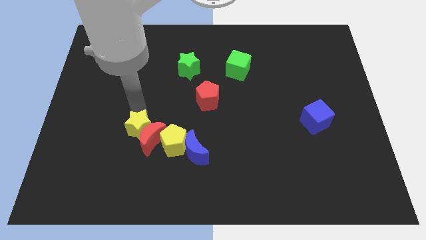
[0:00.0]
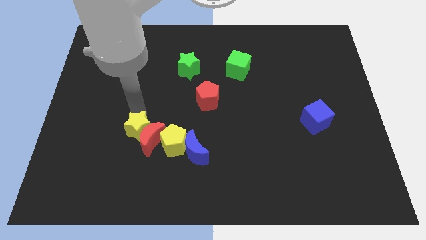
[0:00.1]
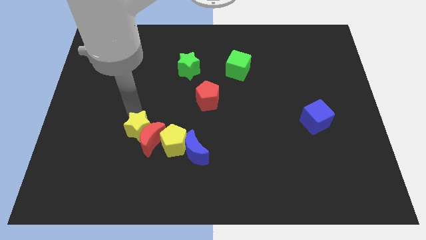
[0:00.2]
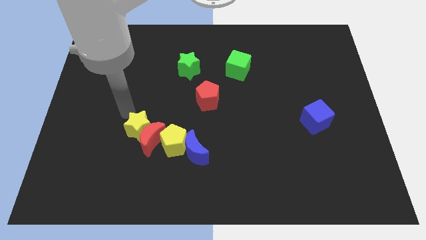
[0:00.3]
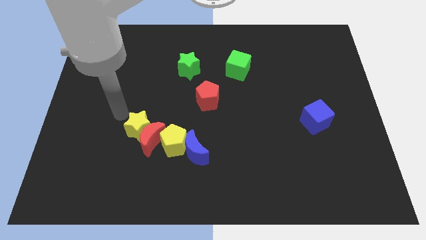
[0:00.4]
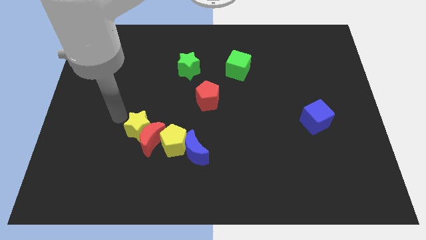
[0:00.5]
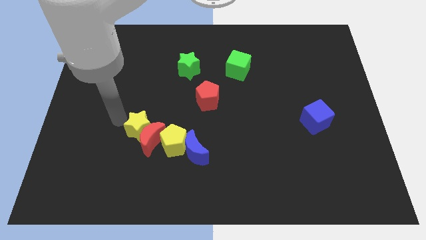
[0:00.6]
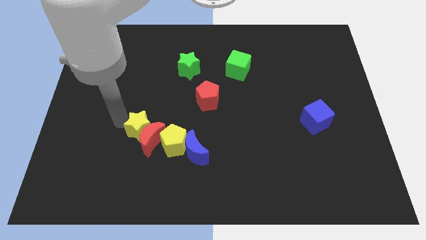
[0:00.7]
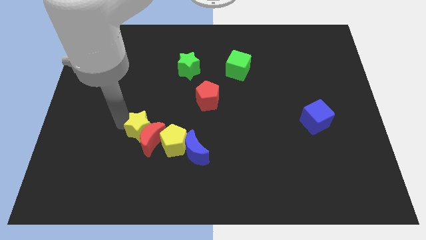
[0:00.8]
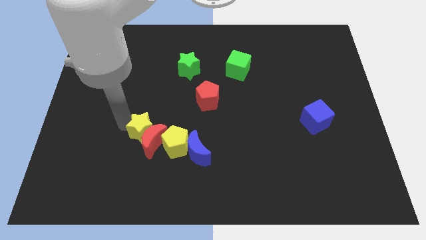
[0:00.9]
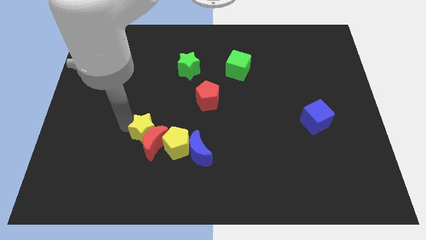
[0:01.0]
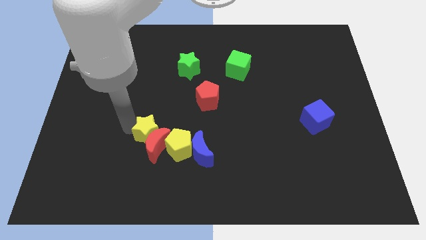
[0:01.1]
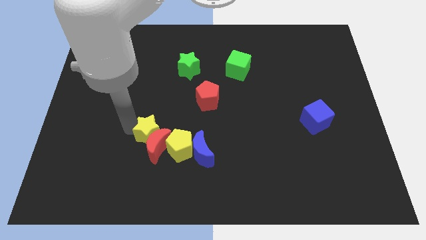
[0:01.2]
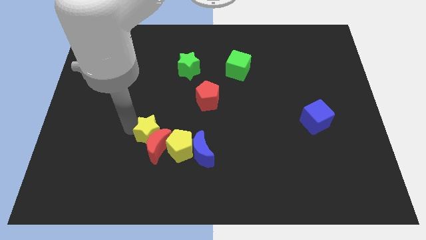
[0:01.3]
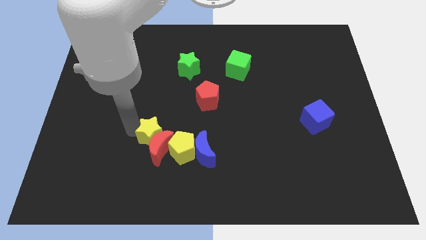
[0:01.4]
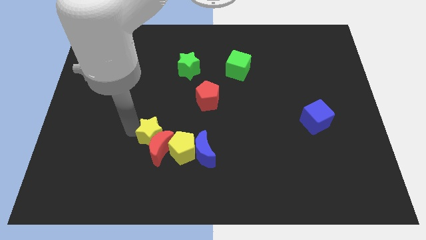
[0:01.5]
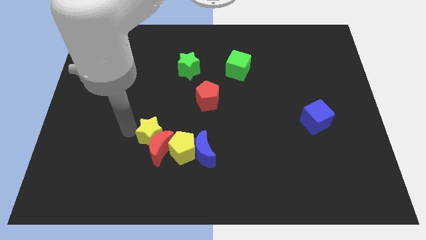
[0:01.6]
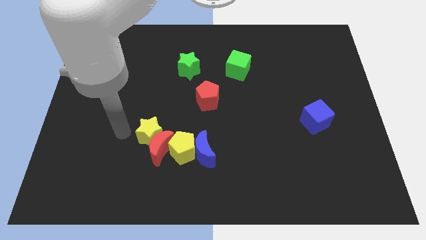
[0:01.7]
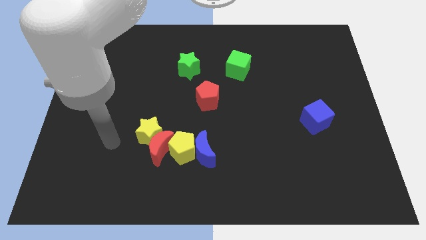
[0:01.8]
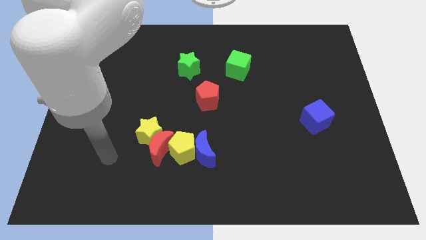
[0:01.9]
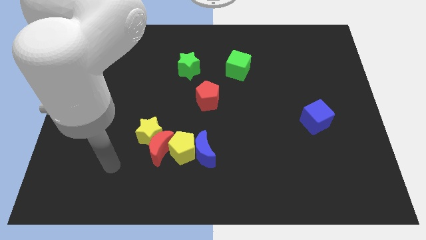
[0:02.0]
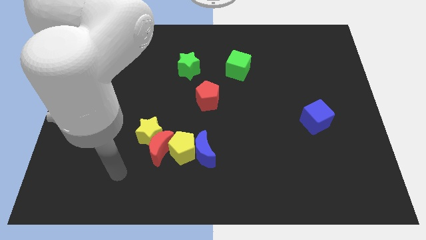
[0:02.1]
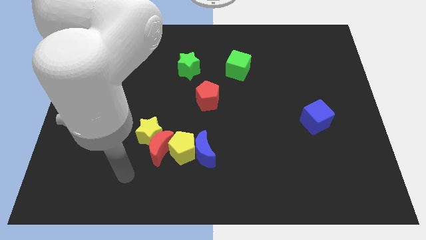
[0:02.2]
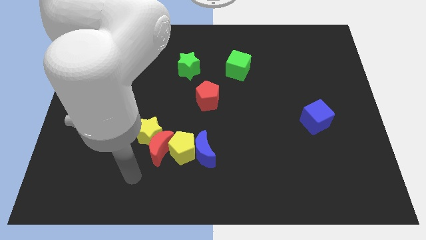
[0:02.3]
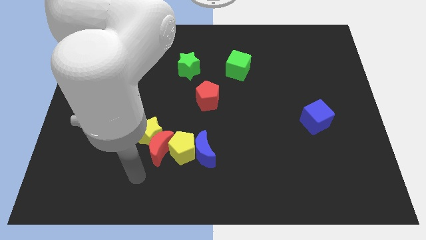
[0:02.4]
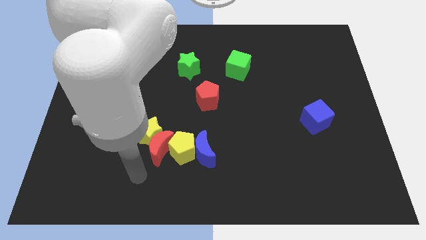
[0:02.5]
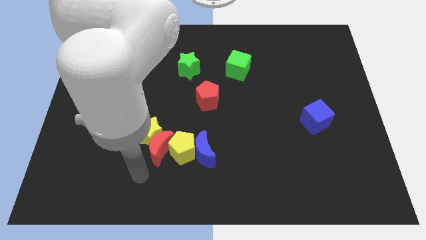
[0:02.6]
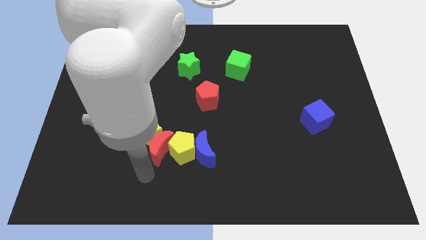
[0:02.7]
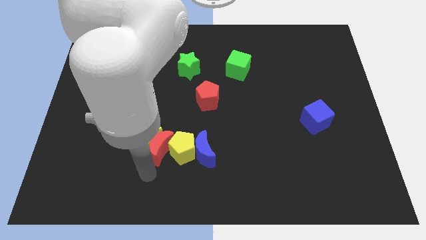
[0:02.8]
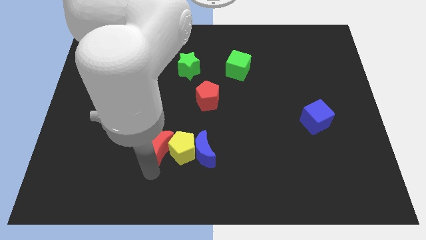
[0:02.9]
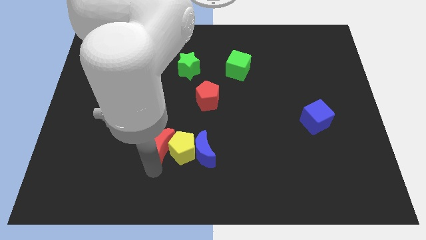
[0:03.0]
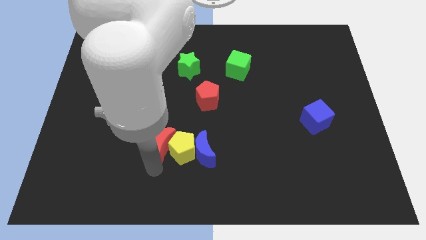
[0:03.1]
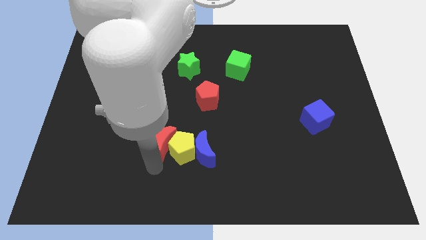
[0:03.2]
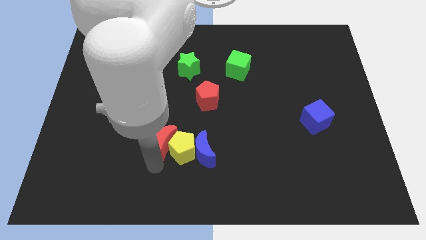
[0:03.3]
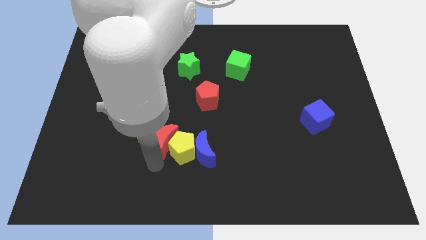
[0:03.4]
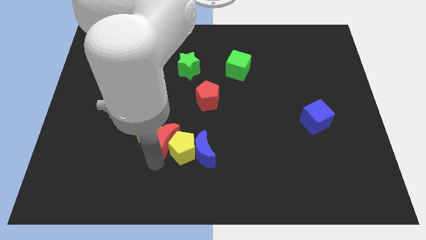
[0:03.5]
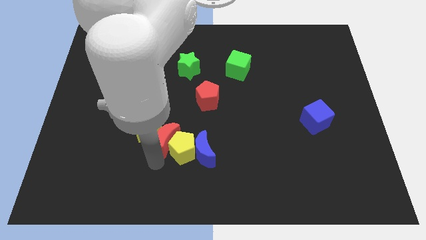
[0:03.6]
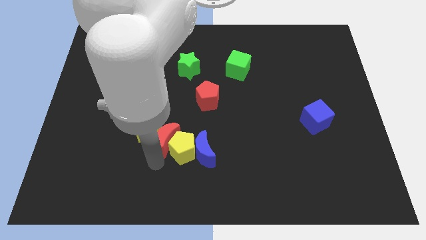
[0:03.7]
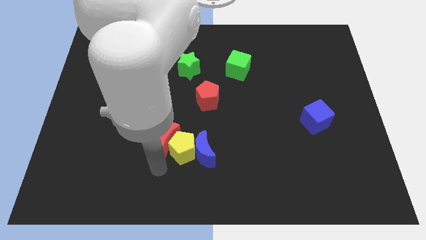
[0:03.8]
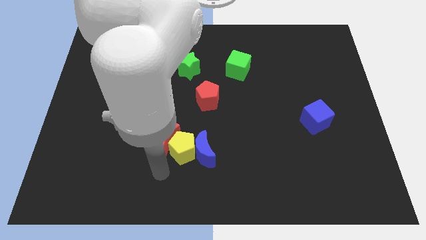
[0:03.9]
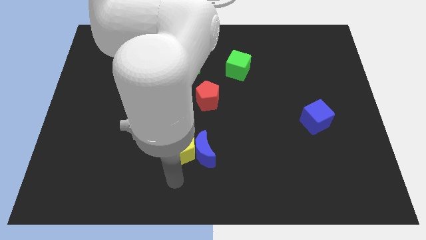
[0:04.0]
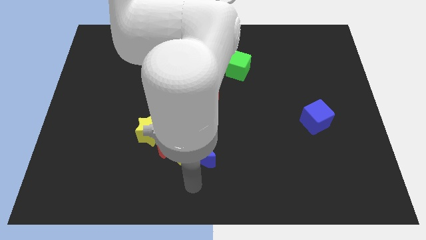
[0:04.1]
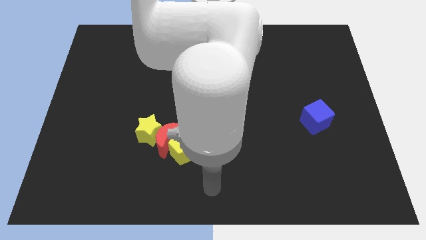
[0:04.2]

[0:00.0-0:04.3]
push the red crescentyellow pentagonn with yellow star

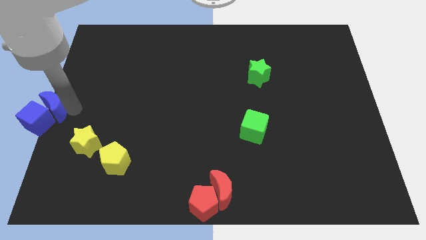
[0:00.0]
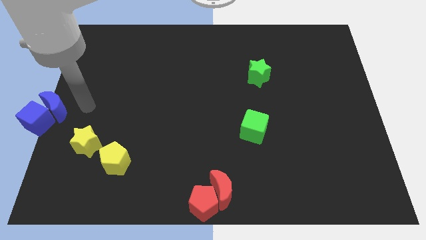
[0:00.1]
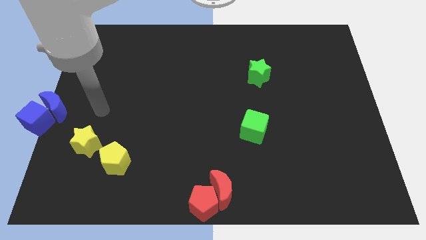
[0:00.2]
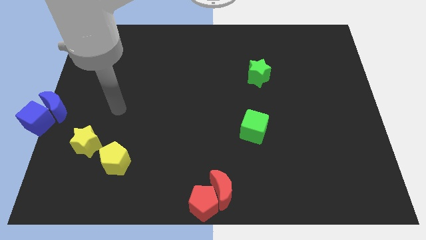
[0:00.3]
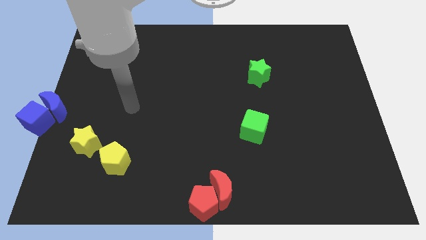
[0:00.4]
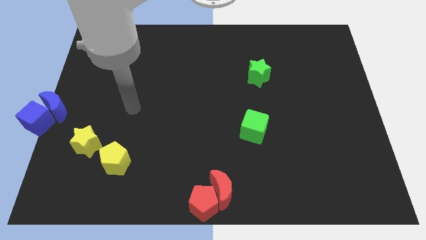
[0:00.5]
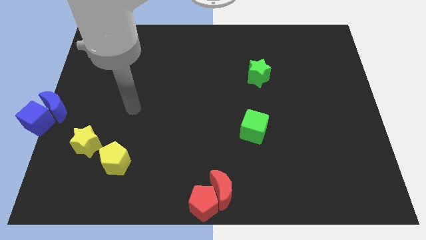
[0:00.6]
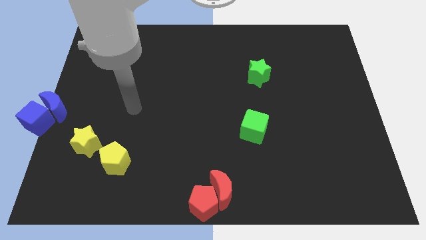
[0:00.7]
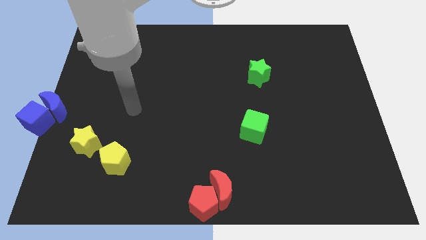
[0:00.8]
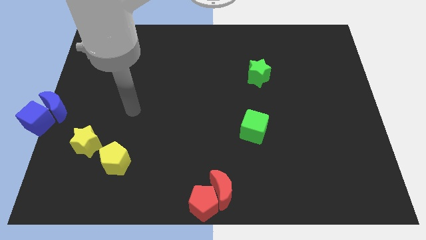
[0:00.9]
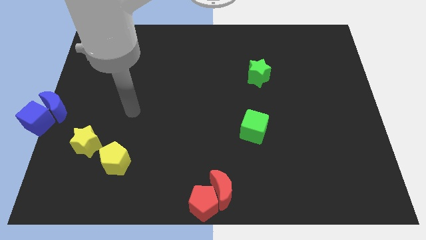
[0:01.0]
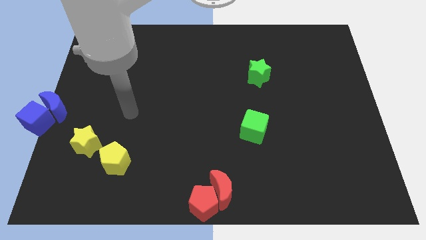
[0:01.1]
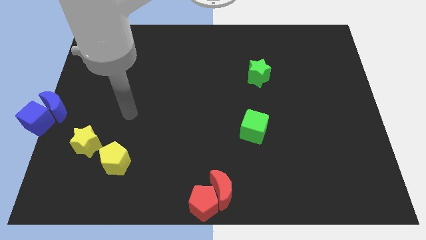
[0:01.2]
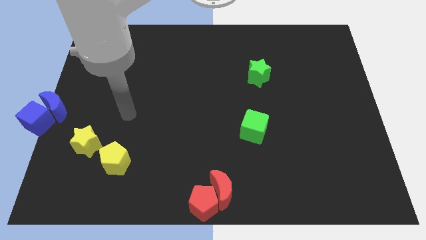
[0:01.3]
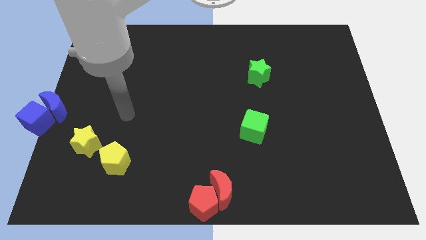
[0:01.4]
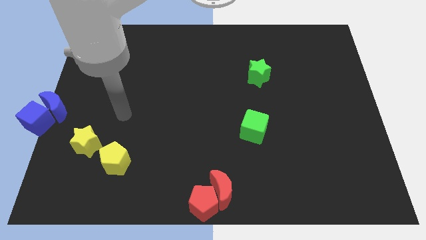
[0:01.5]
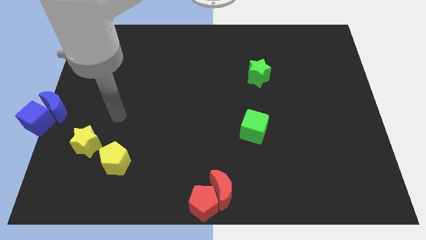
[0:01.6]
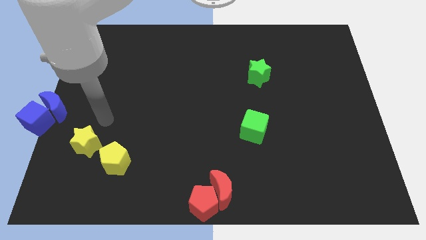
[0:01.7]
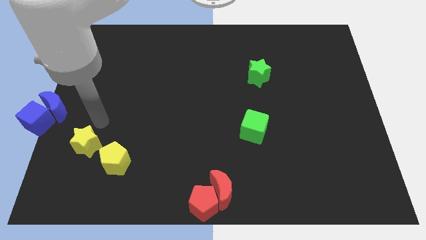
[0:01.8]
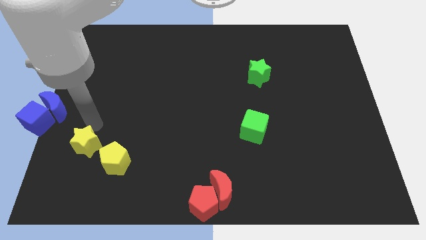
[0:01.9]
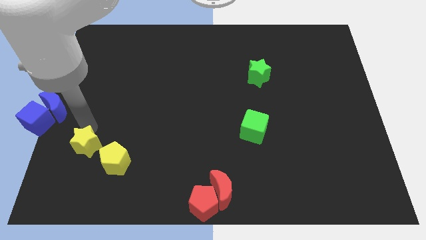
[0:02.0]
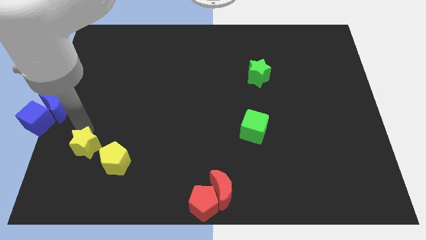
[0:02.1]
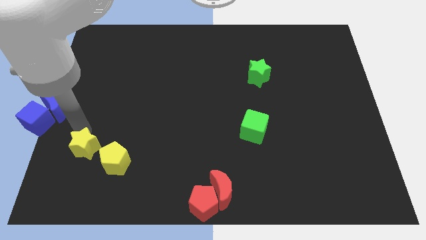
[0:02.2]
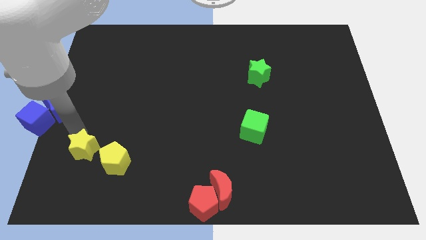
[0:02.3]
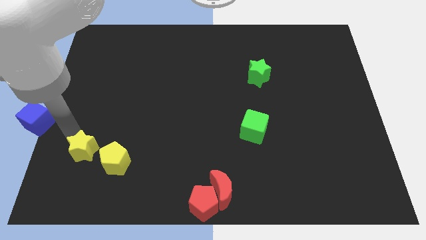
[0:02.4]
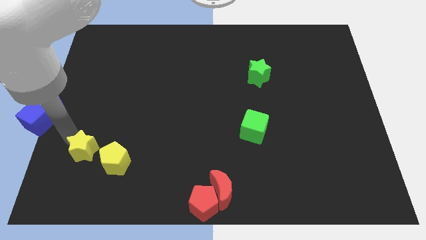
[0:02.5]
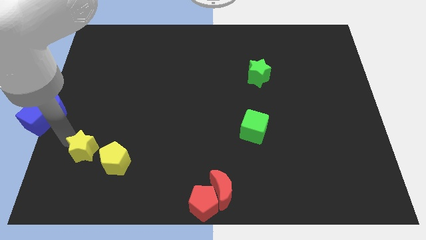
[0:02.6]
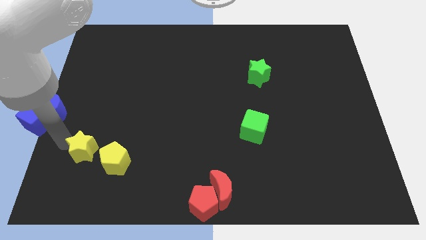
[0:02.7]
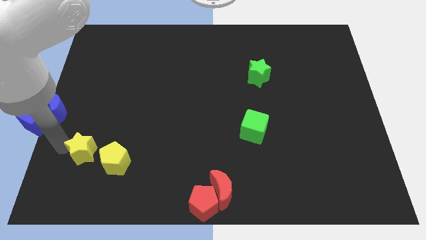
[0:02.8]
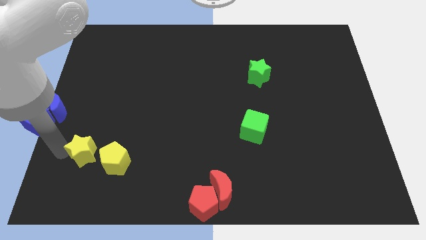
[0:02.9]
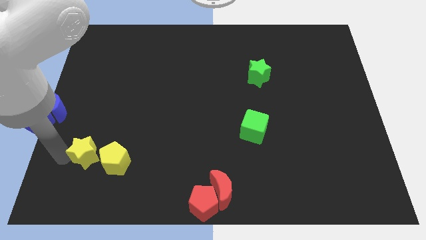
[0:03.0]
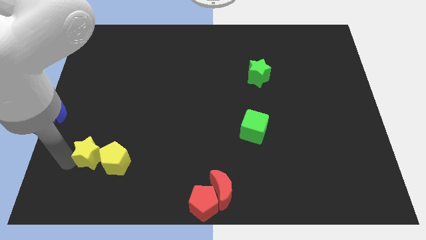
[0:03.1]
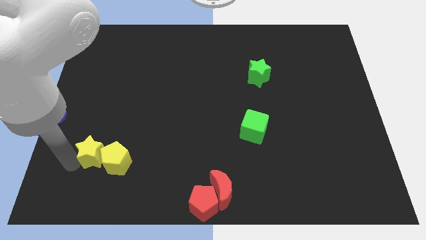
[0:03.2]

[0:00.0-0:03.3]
push the yellow star to the left of the yellow pentagon

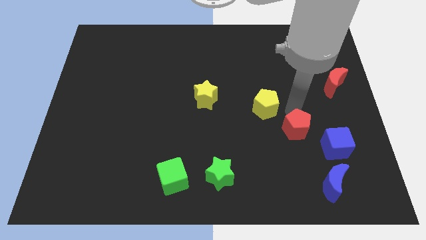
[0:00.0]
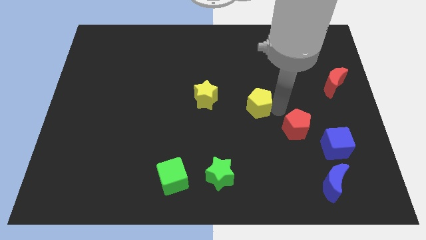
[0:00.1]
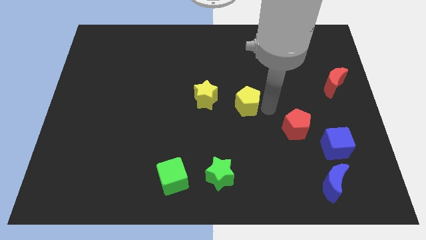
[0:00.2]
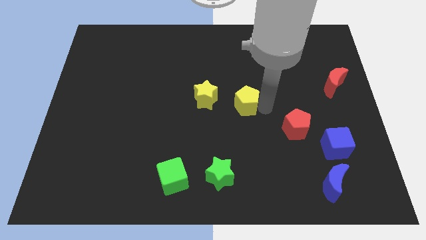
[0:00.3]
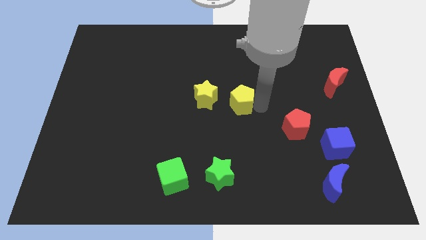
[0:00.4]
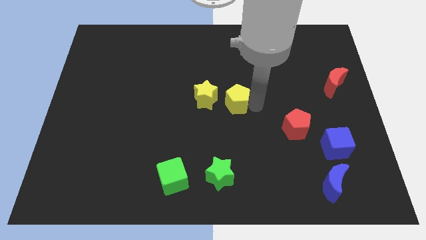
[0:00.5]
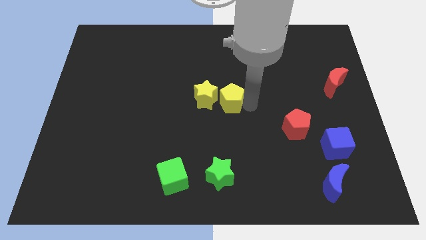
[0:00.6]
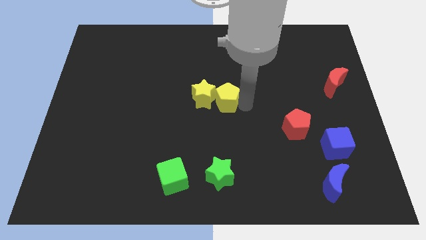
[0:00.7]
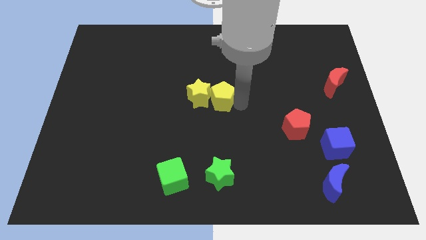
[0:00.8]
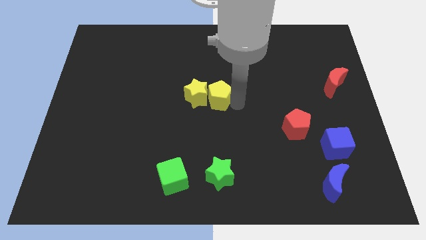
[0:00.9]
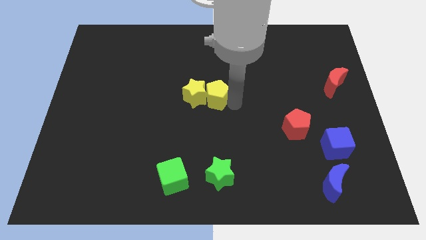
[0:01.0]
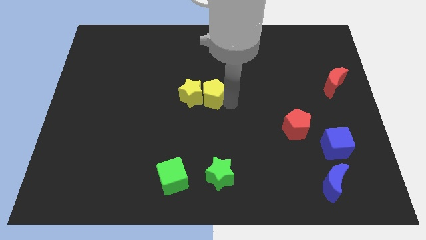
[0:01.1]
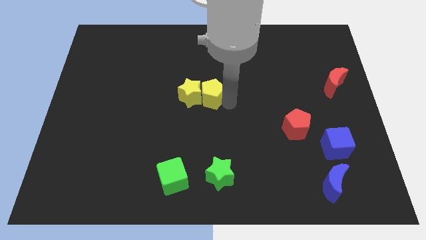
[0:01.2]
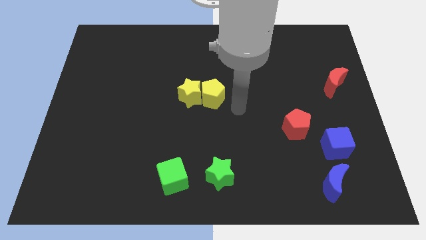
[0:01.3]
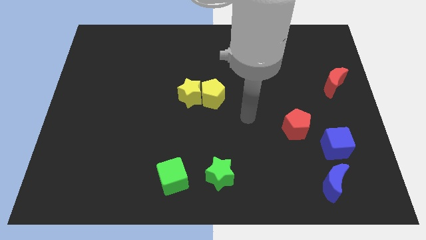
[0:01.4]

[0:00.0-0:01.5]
push the yellow pentagon into the yellow star
